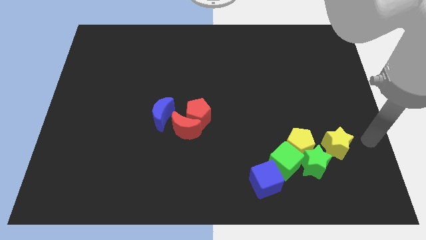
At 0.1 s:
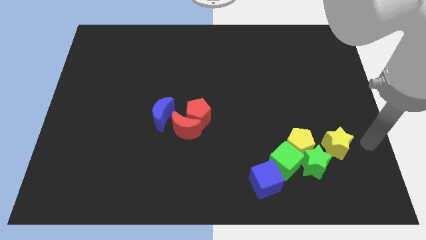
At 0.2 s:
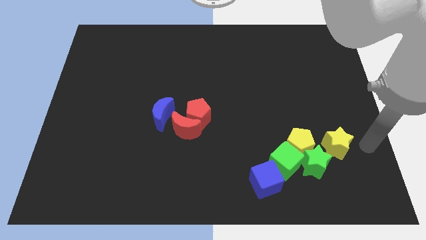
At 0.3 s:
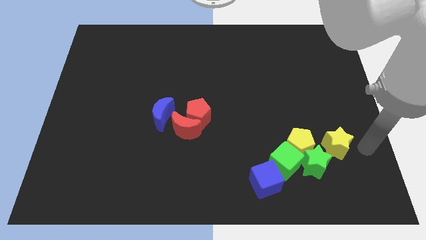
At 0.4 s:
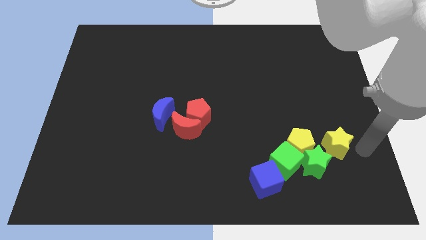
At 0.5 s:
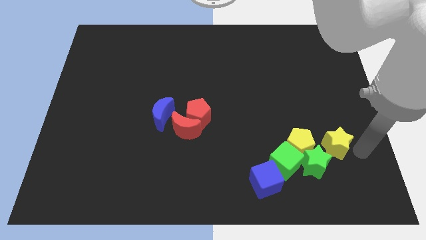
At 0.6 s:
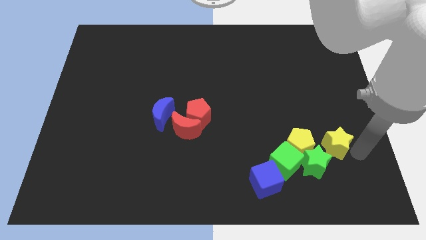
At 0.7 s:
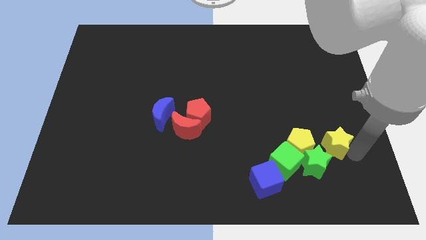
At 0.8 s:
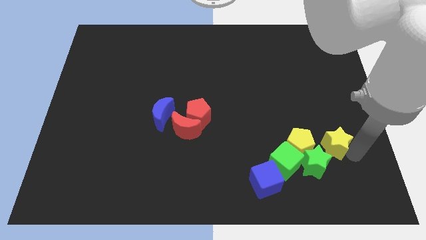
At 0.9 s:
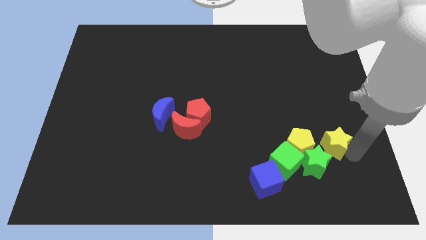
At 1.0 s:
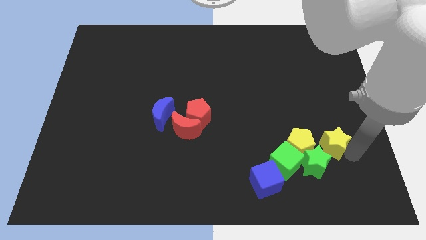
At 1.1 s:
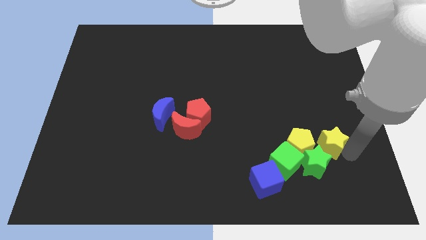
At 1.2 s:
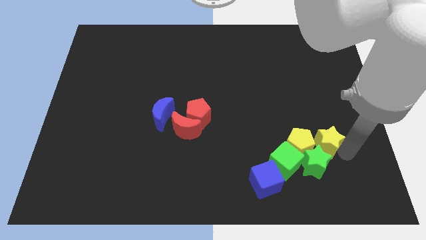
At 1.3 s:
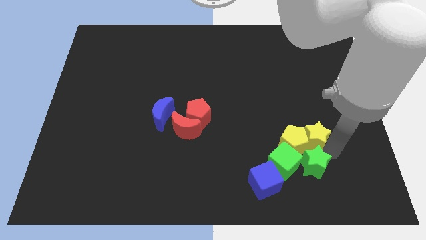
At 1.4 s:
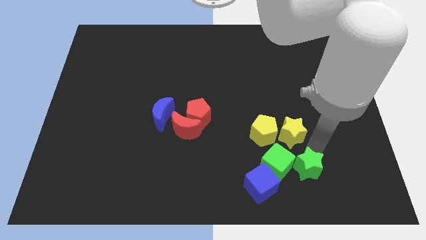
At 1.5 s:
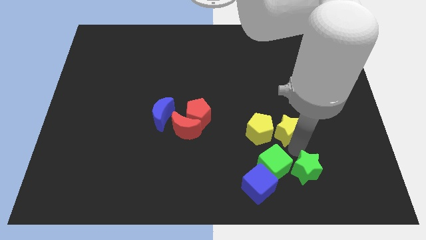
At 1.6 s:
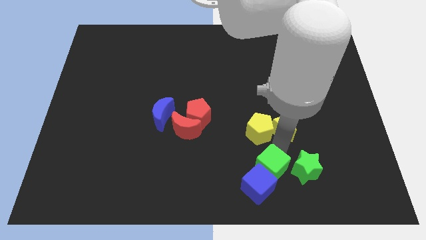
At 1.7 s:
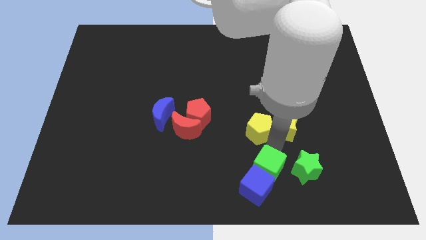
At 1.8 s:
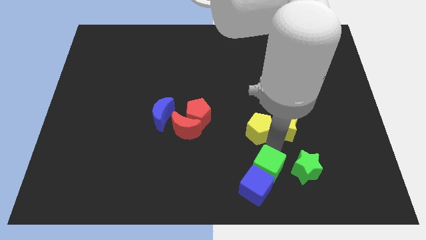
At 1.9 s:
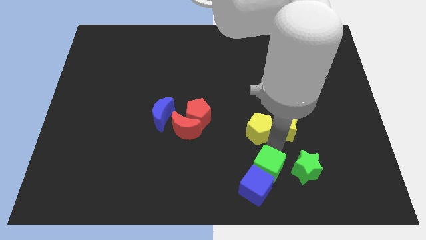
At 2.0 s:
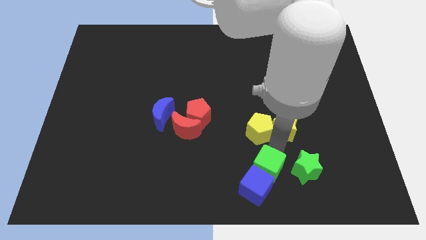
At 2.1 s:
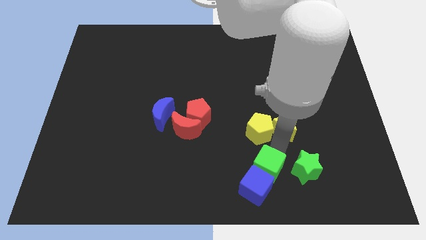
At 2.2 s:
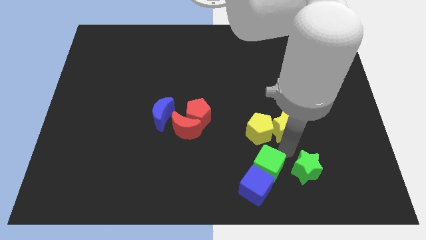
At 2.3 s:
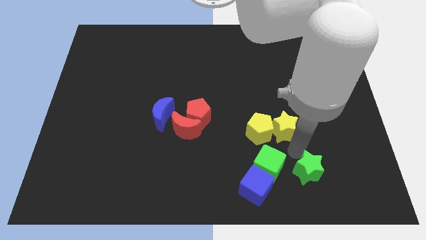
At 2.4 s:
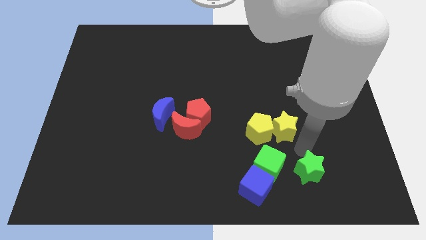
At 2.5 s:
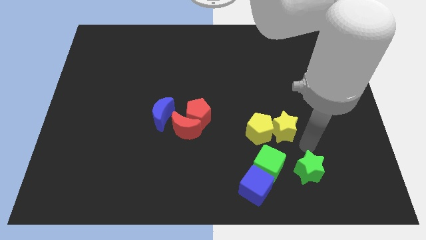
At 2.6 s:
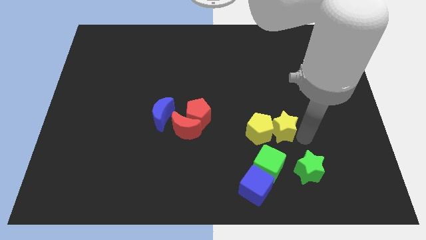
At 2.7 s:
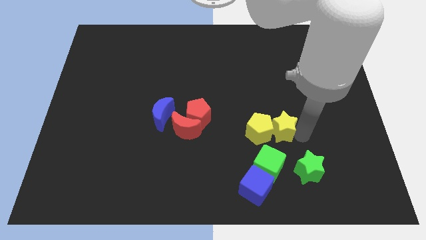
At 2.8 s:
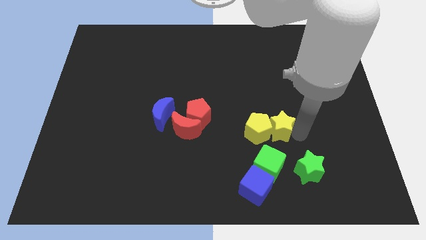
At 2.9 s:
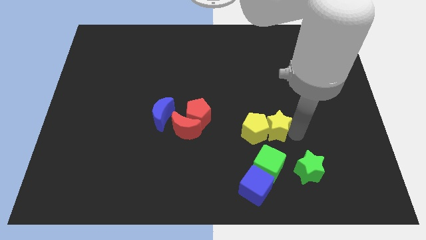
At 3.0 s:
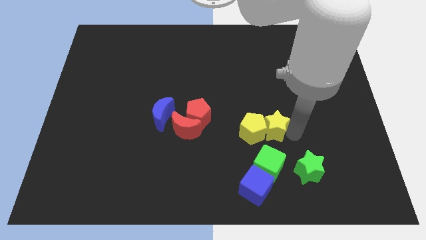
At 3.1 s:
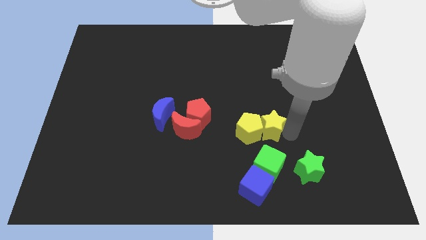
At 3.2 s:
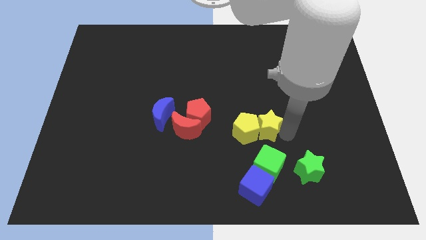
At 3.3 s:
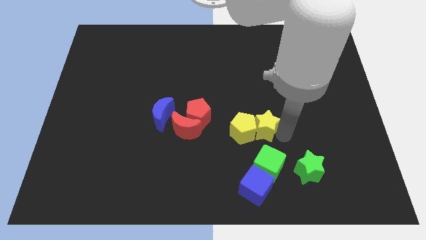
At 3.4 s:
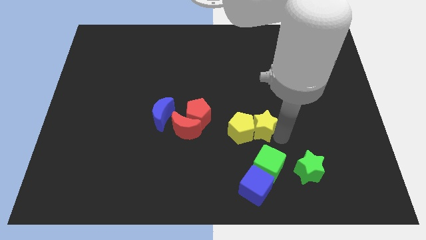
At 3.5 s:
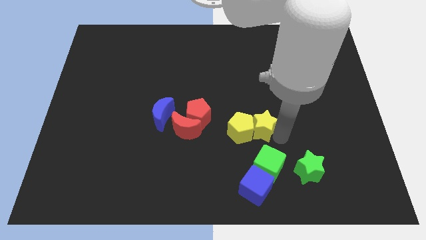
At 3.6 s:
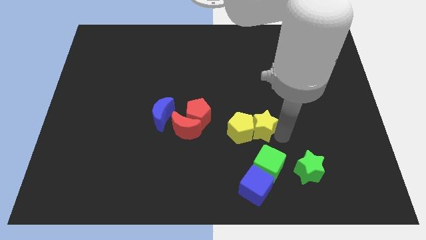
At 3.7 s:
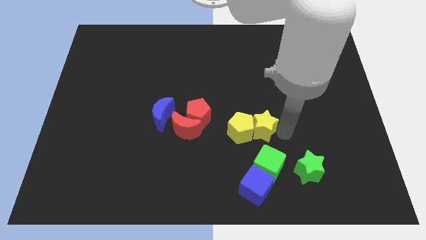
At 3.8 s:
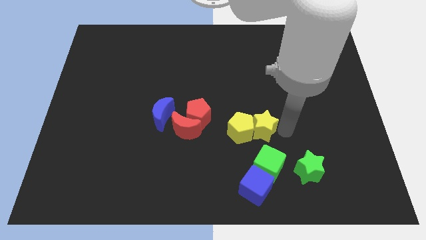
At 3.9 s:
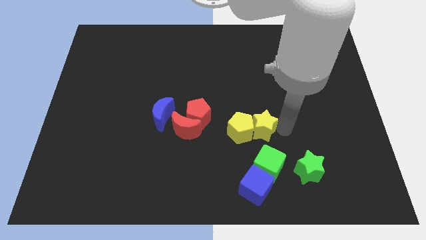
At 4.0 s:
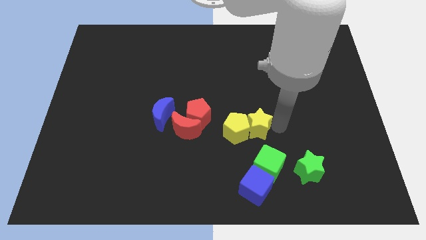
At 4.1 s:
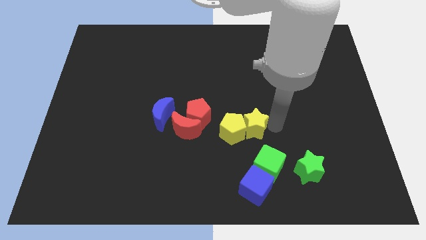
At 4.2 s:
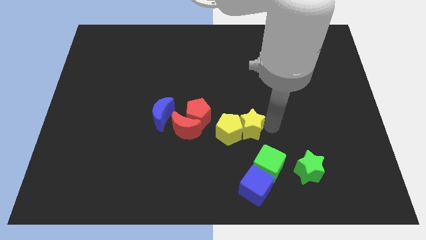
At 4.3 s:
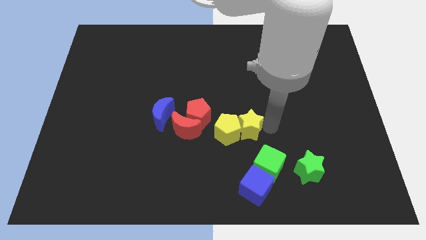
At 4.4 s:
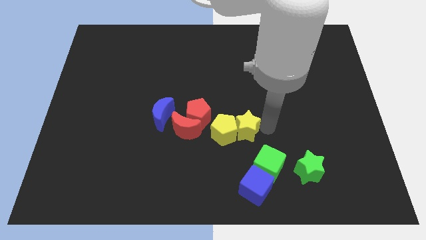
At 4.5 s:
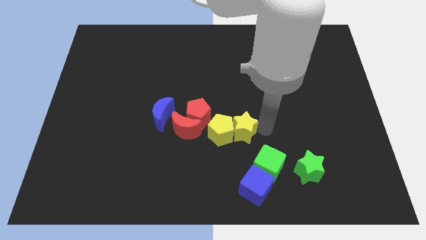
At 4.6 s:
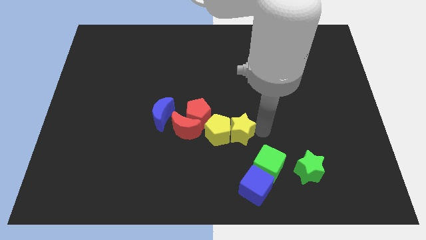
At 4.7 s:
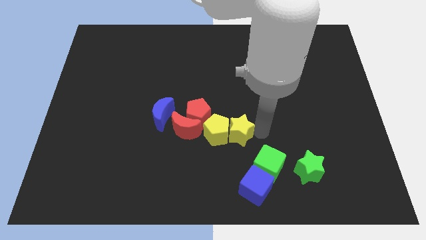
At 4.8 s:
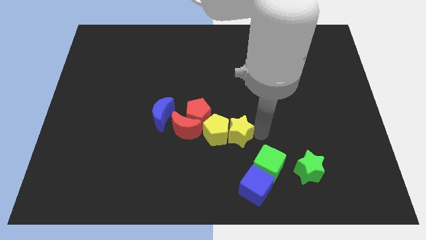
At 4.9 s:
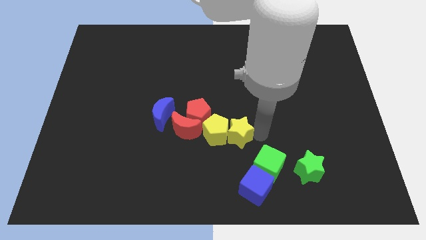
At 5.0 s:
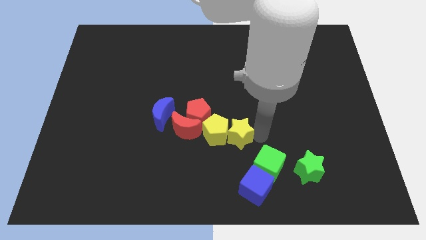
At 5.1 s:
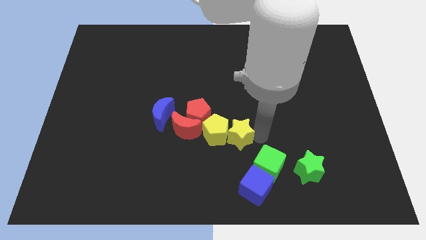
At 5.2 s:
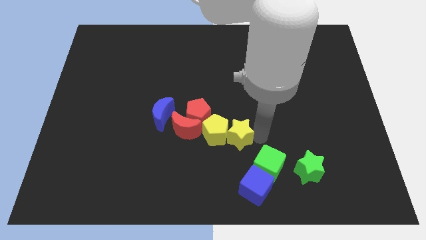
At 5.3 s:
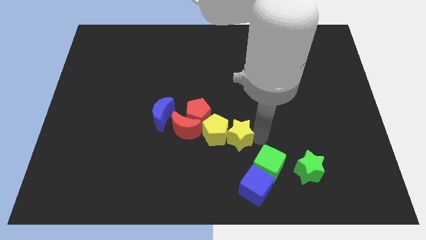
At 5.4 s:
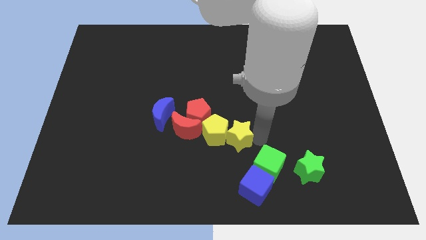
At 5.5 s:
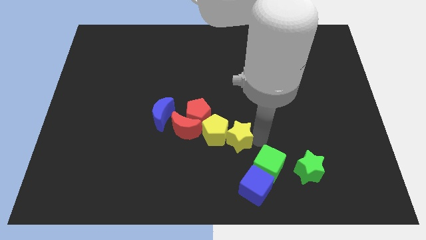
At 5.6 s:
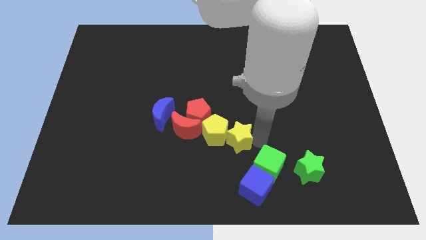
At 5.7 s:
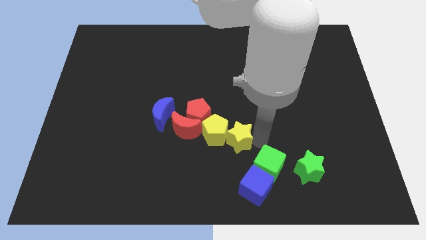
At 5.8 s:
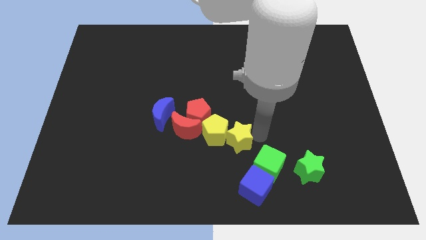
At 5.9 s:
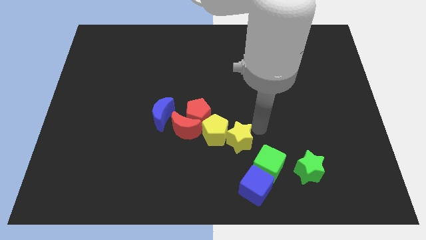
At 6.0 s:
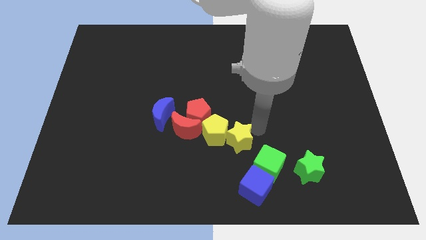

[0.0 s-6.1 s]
move yellow star and yellow pentagon towards the right of the red crescent

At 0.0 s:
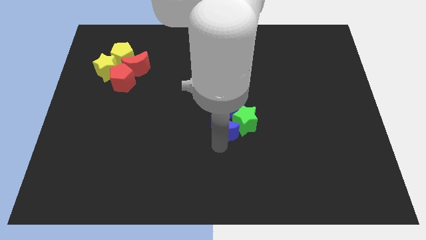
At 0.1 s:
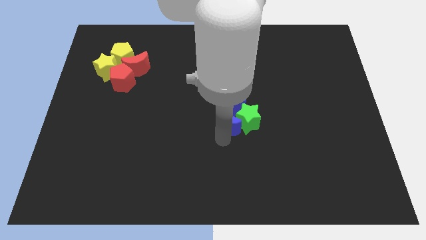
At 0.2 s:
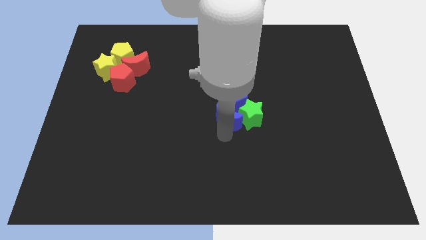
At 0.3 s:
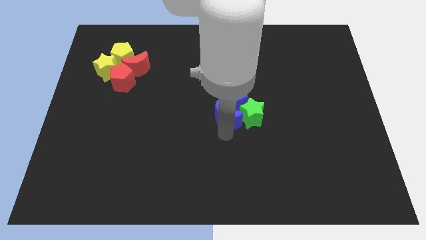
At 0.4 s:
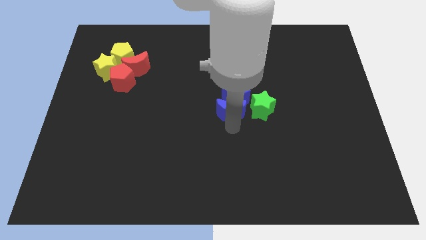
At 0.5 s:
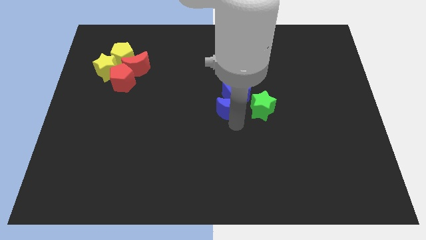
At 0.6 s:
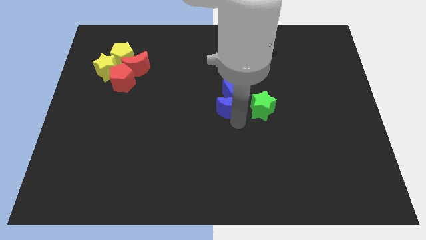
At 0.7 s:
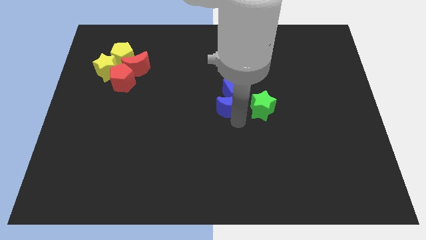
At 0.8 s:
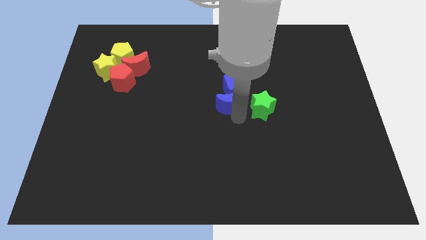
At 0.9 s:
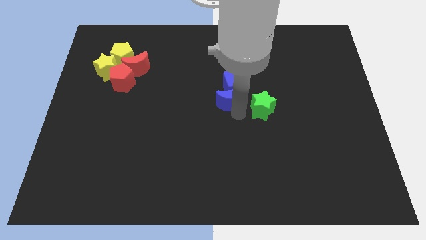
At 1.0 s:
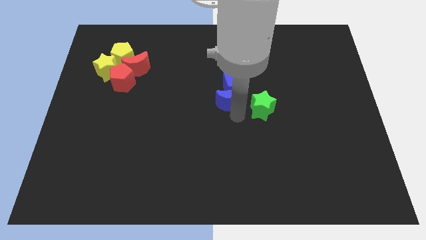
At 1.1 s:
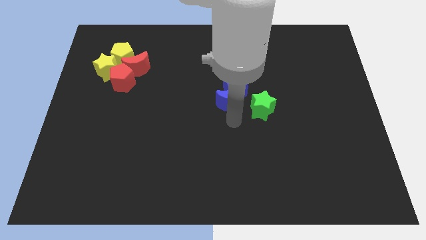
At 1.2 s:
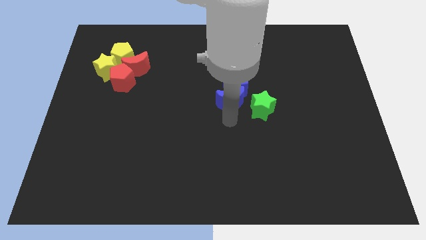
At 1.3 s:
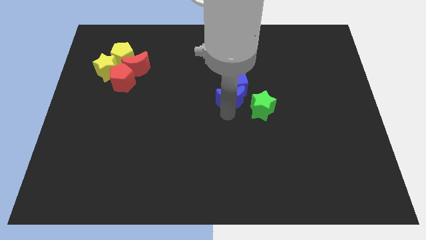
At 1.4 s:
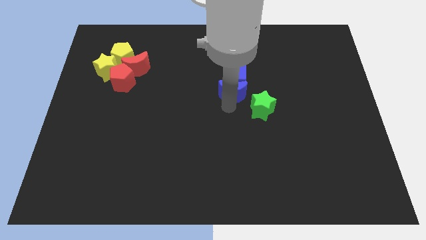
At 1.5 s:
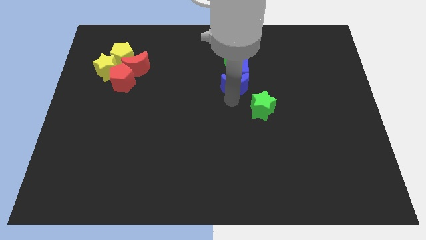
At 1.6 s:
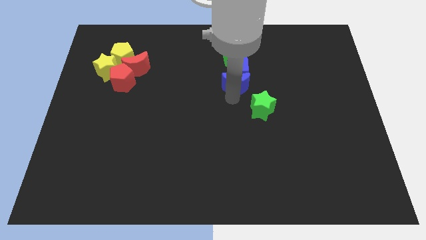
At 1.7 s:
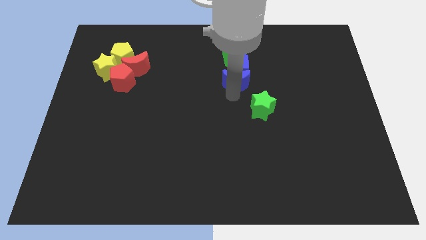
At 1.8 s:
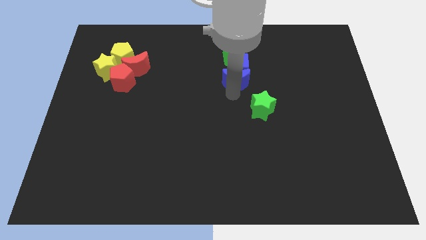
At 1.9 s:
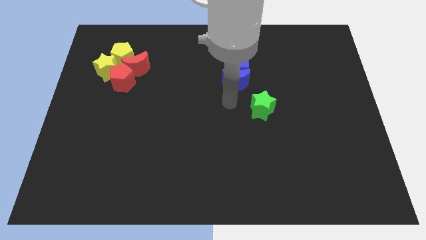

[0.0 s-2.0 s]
separate green star and the blue blocks

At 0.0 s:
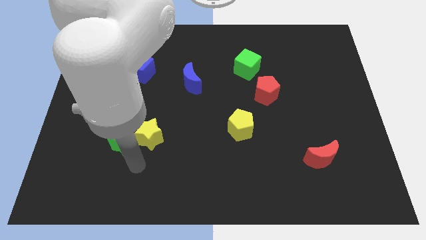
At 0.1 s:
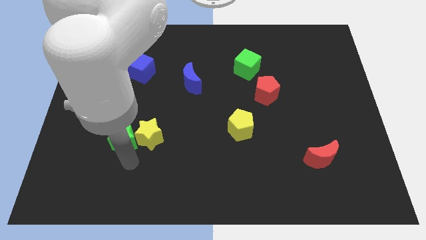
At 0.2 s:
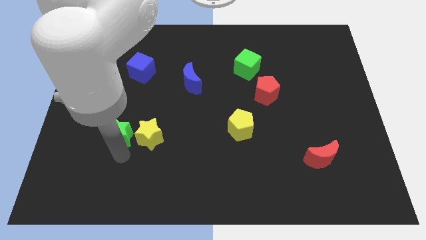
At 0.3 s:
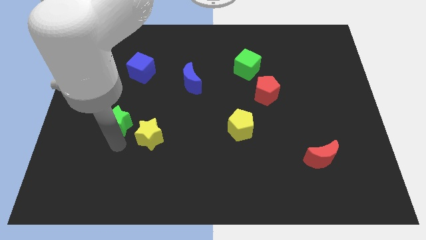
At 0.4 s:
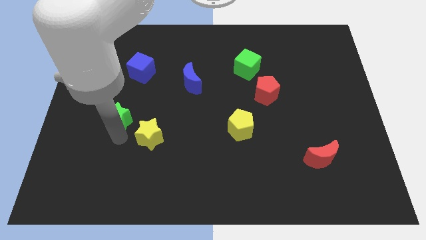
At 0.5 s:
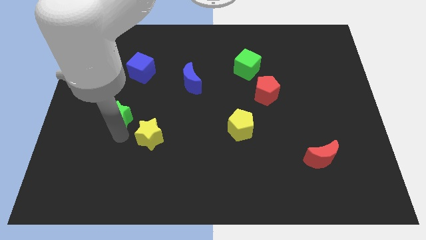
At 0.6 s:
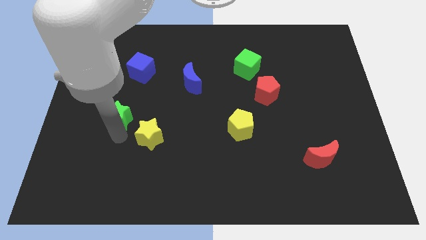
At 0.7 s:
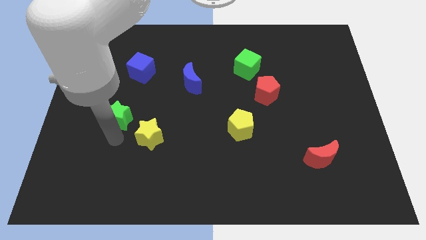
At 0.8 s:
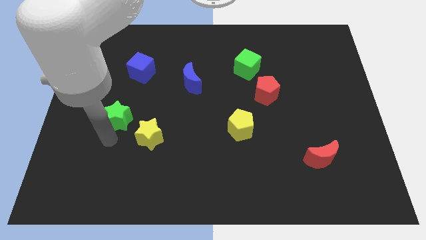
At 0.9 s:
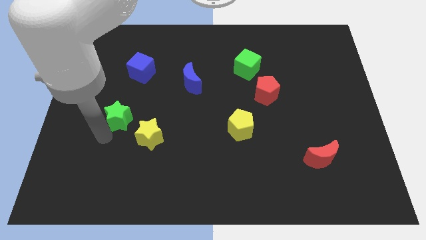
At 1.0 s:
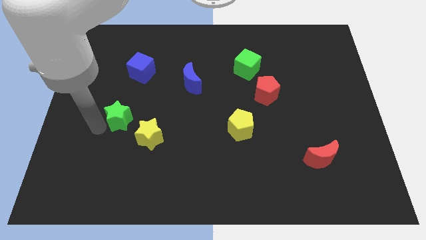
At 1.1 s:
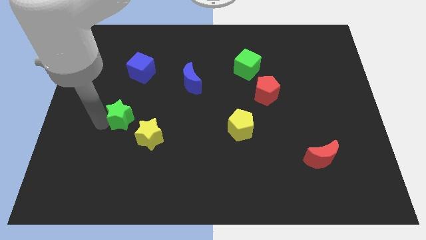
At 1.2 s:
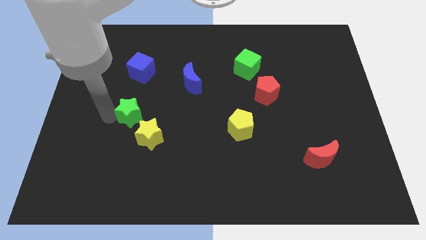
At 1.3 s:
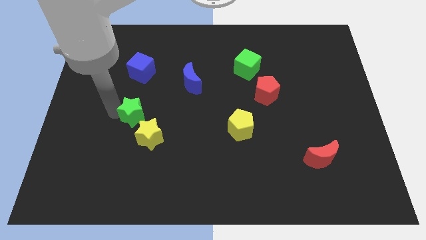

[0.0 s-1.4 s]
move green star diagonally above yellow star
